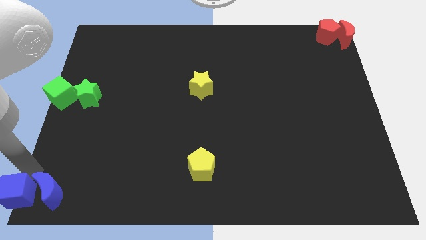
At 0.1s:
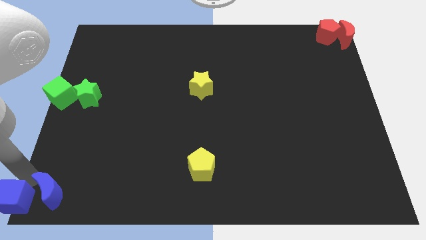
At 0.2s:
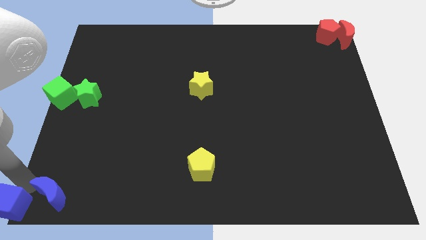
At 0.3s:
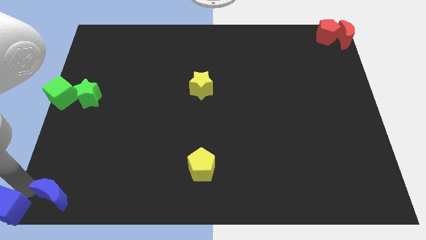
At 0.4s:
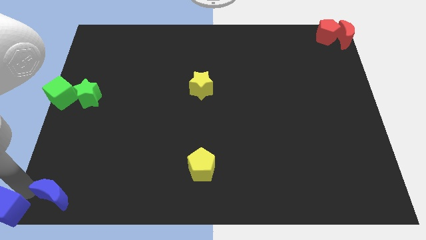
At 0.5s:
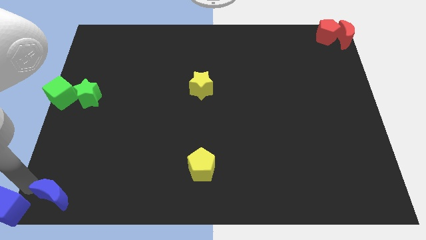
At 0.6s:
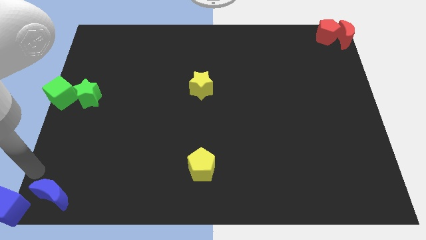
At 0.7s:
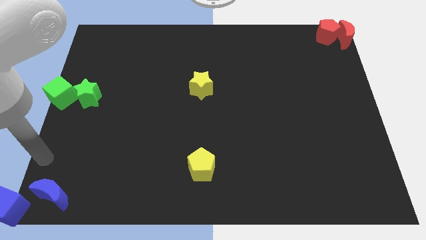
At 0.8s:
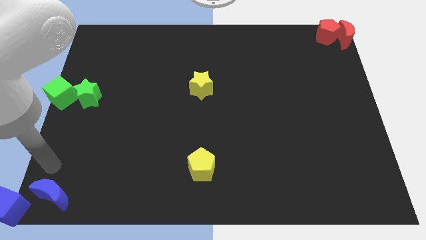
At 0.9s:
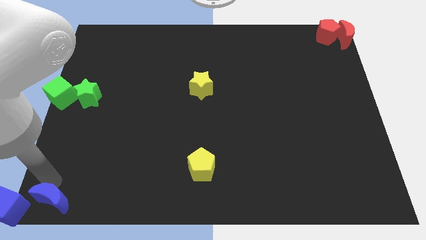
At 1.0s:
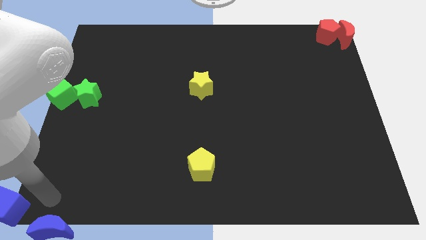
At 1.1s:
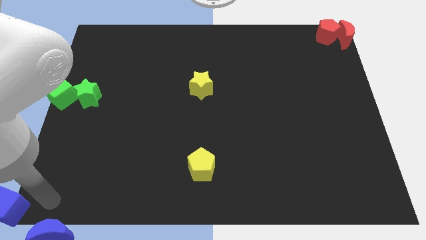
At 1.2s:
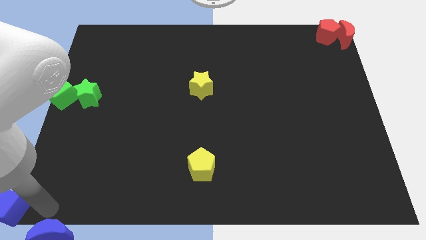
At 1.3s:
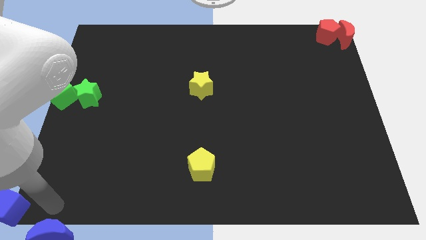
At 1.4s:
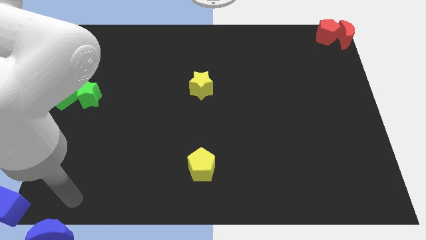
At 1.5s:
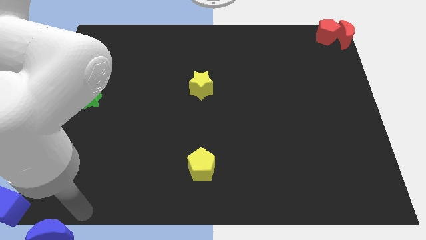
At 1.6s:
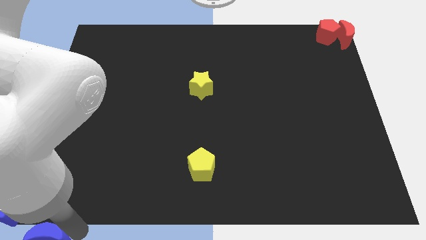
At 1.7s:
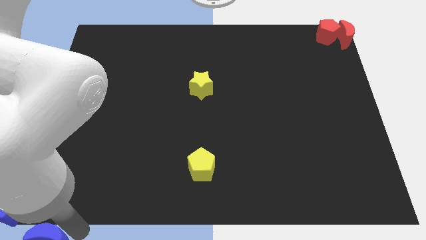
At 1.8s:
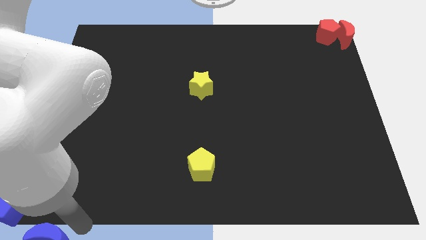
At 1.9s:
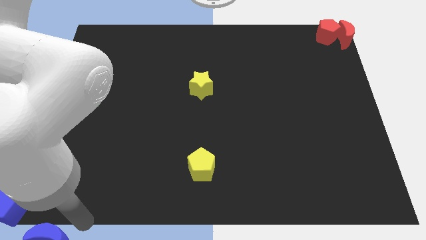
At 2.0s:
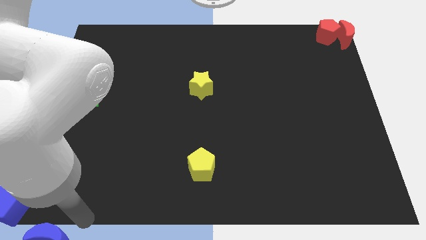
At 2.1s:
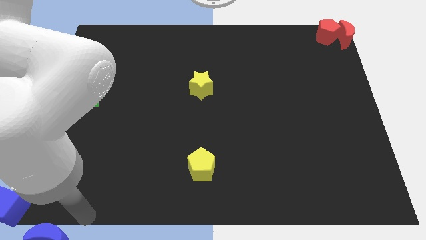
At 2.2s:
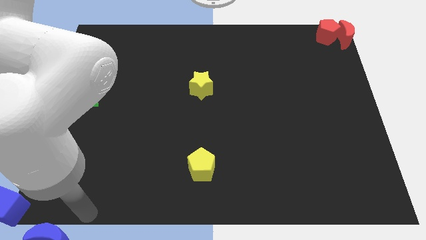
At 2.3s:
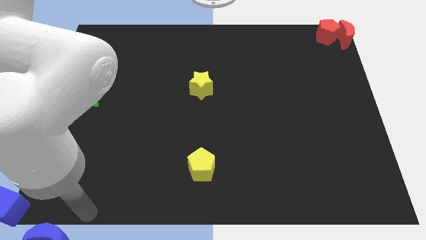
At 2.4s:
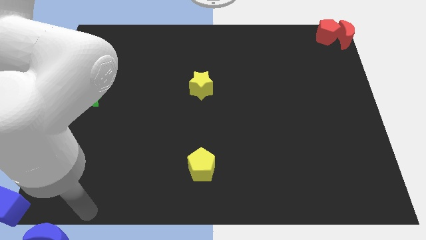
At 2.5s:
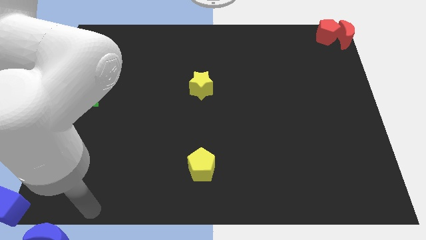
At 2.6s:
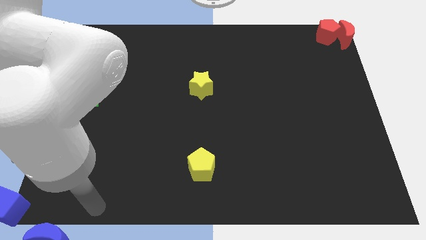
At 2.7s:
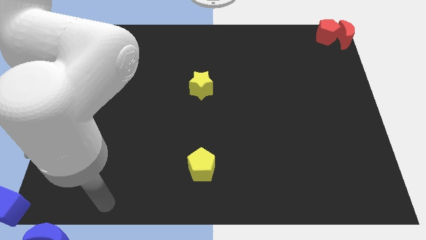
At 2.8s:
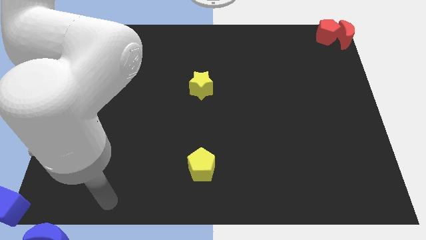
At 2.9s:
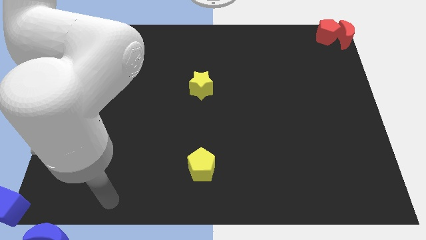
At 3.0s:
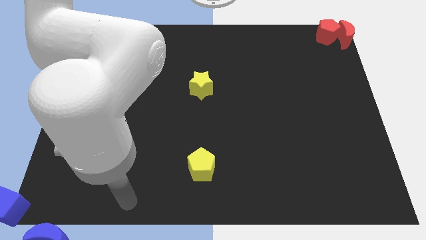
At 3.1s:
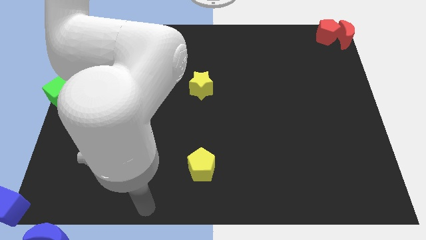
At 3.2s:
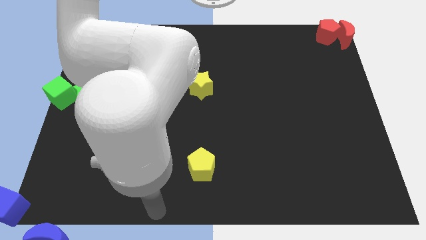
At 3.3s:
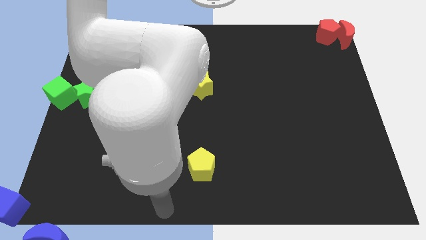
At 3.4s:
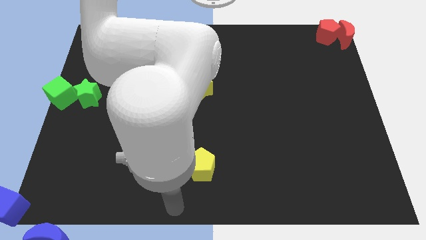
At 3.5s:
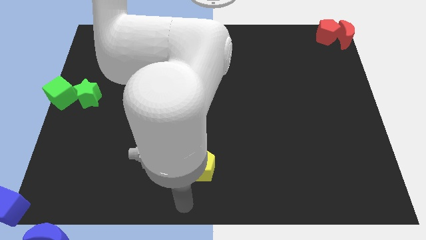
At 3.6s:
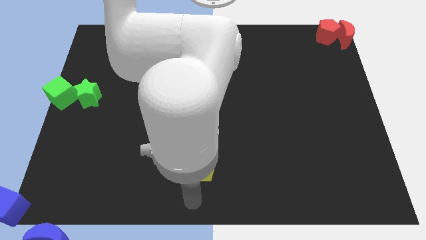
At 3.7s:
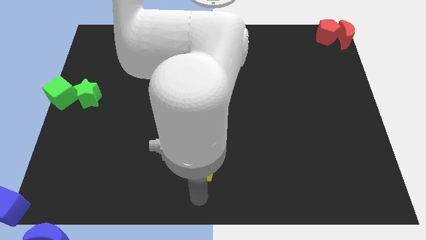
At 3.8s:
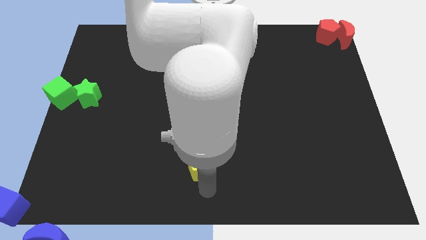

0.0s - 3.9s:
place the blue cube towards the bottom left corner of the board

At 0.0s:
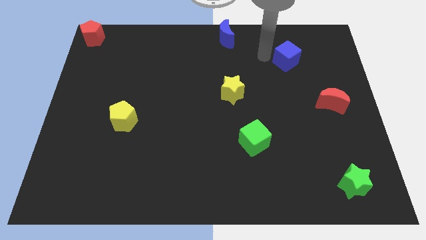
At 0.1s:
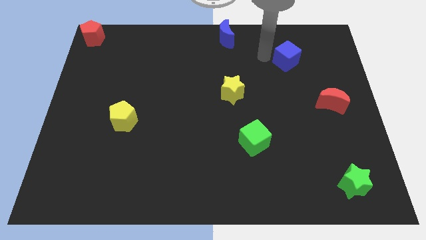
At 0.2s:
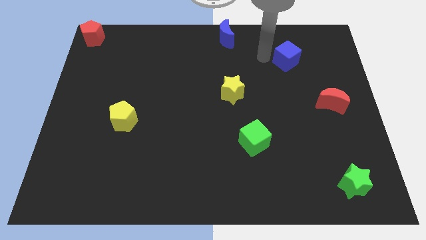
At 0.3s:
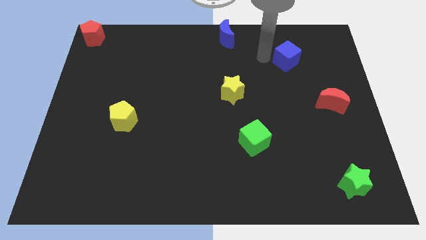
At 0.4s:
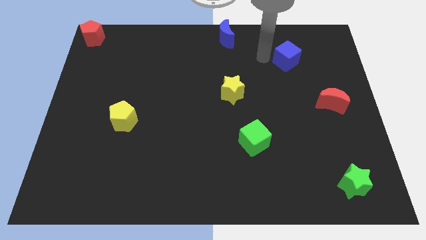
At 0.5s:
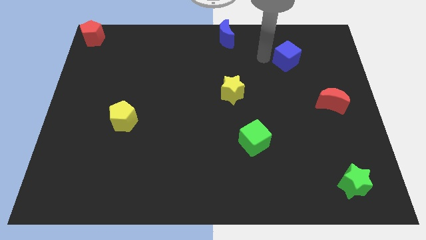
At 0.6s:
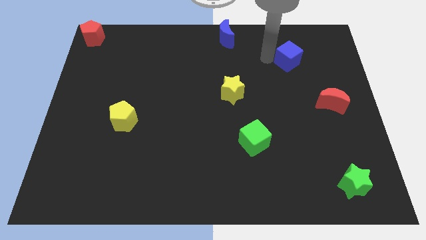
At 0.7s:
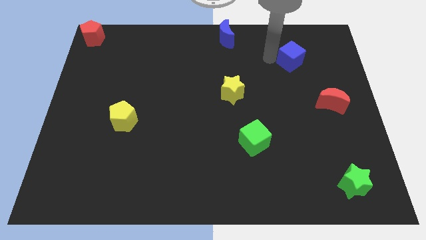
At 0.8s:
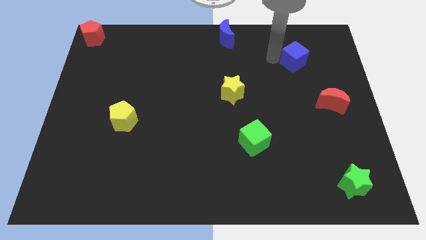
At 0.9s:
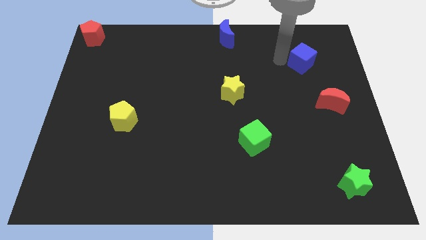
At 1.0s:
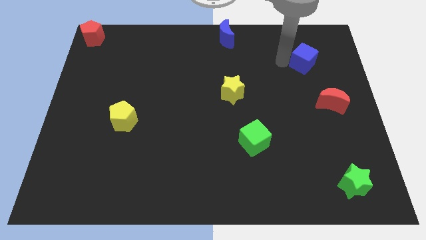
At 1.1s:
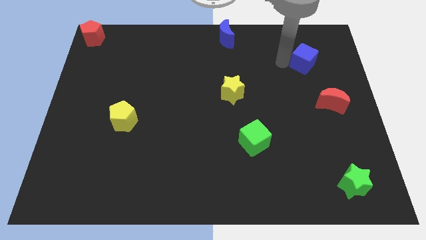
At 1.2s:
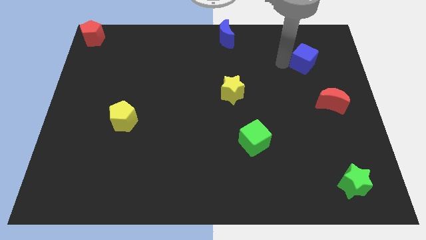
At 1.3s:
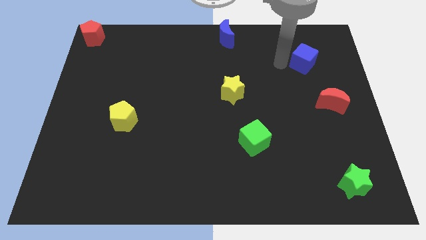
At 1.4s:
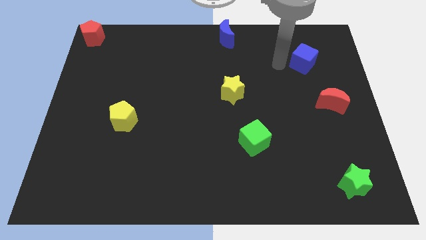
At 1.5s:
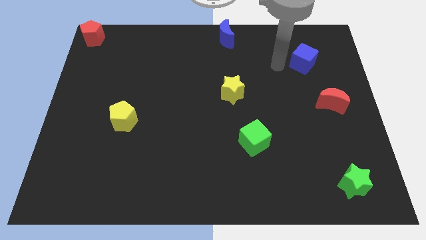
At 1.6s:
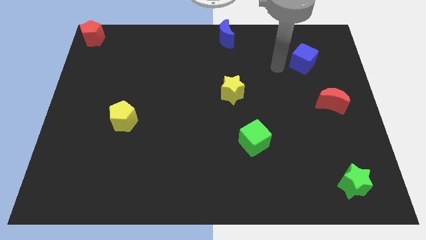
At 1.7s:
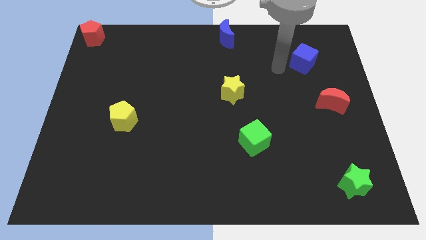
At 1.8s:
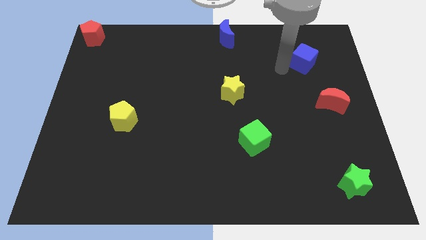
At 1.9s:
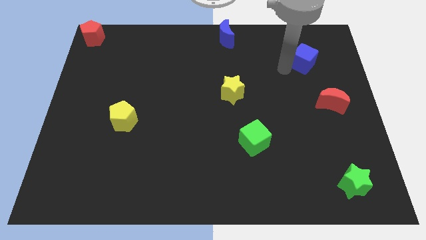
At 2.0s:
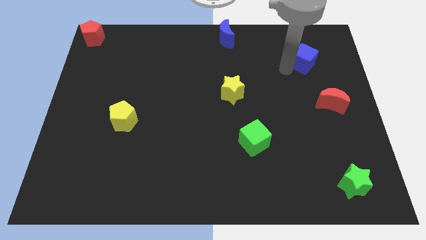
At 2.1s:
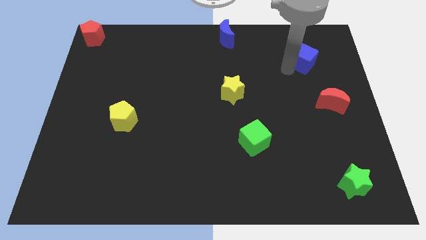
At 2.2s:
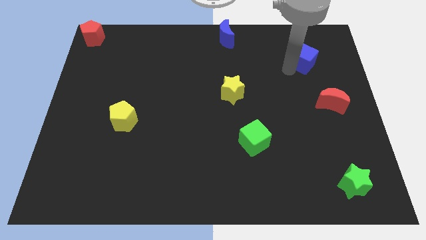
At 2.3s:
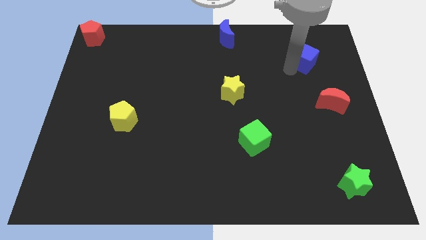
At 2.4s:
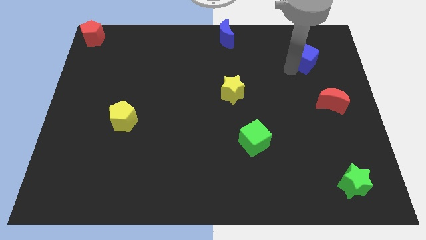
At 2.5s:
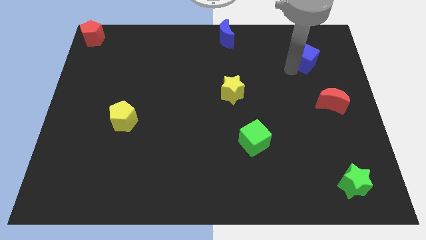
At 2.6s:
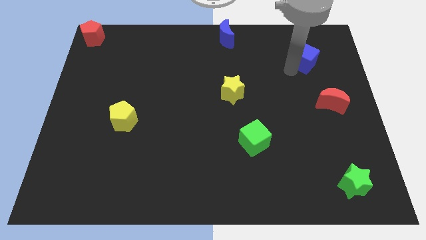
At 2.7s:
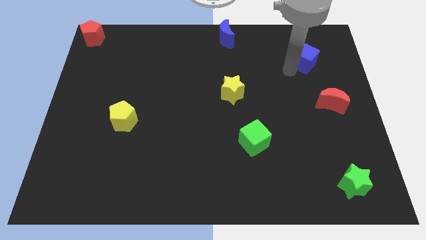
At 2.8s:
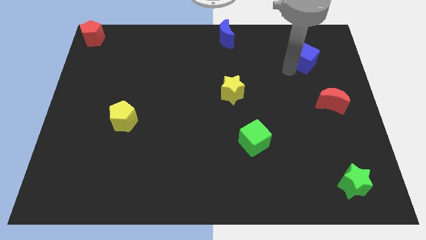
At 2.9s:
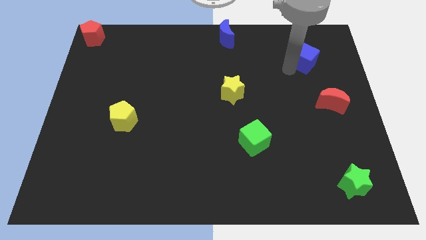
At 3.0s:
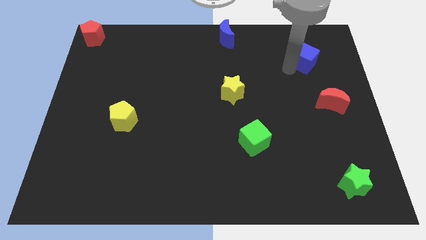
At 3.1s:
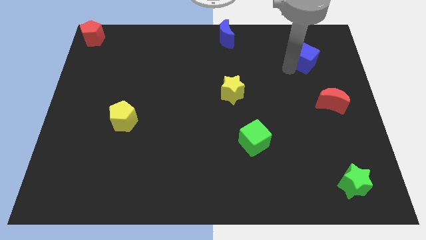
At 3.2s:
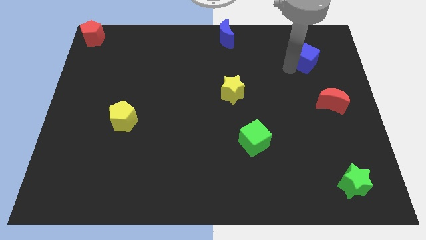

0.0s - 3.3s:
move the blue cube to right

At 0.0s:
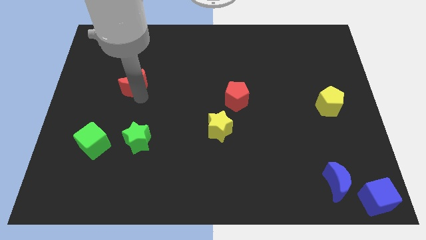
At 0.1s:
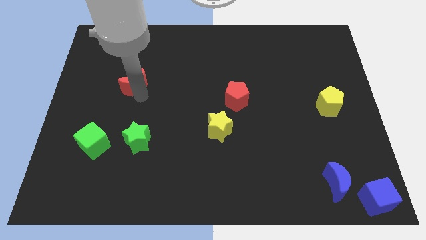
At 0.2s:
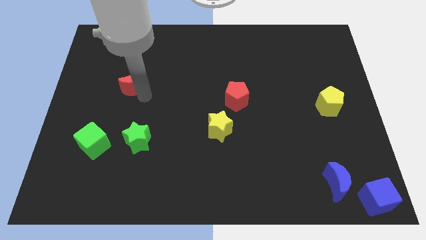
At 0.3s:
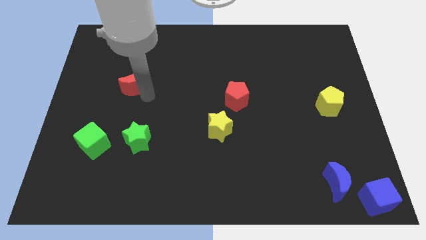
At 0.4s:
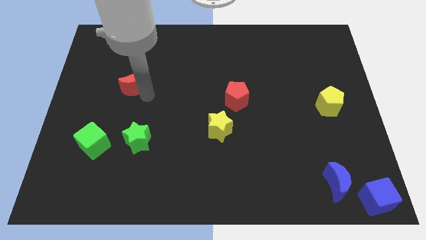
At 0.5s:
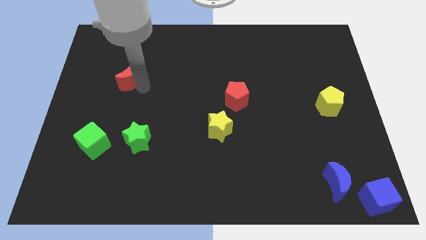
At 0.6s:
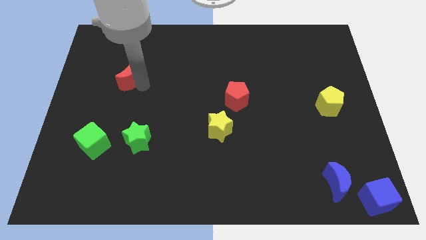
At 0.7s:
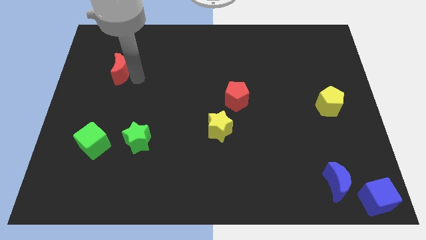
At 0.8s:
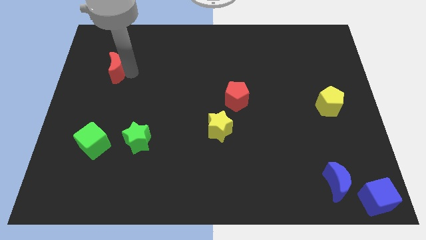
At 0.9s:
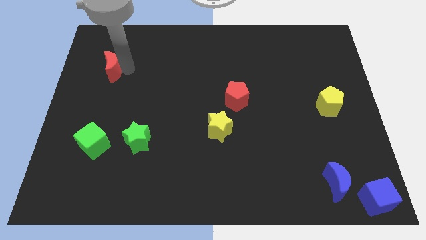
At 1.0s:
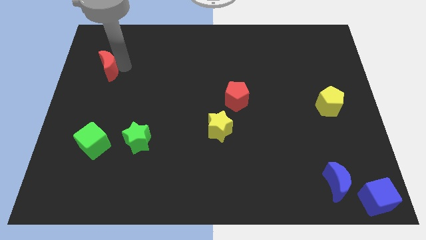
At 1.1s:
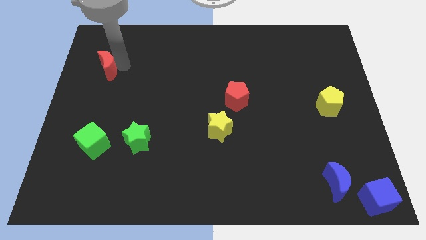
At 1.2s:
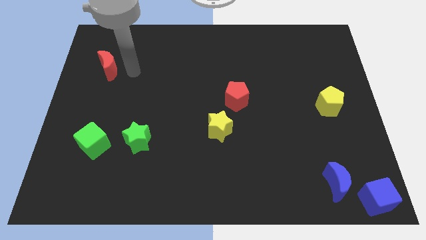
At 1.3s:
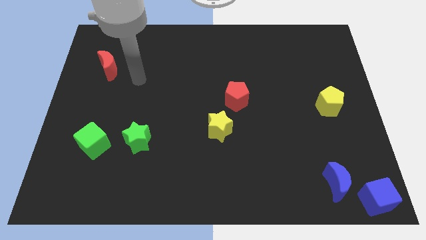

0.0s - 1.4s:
push the red moon to center left

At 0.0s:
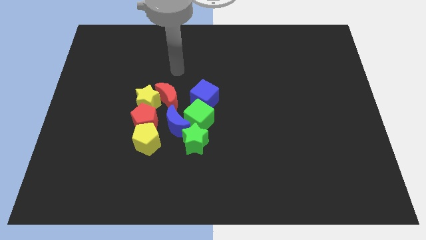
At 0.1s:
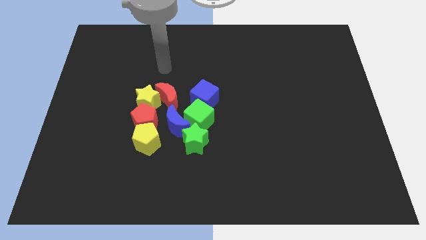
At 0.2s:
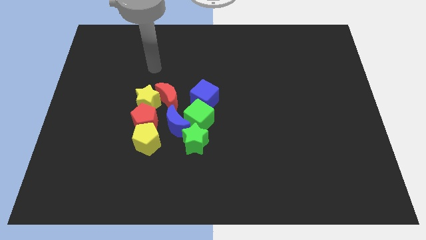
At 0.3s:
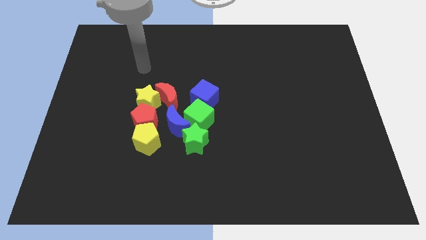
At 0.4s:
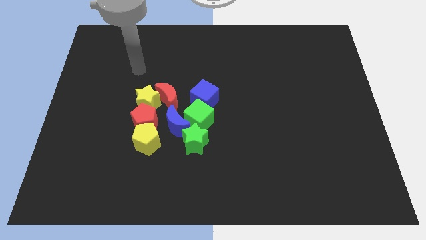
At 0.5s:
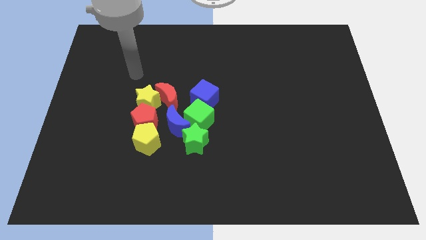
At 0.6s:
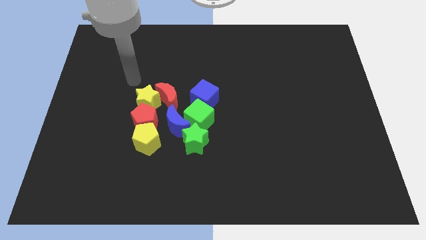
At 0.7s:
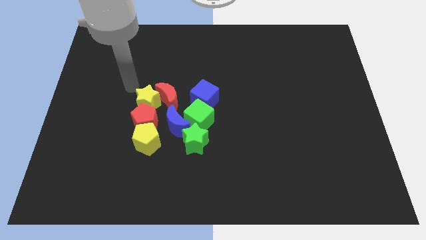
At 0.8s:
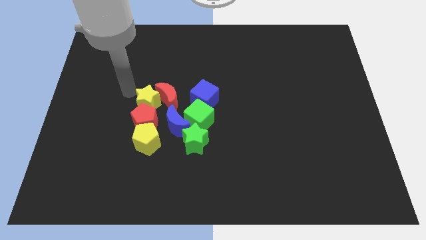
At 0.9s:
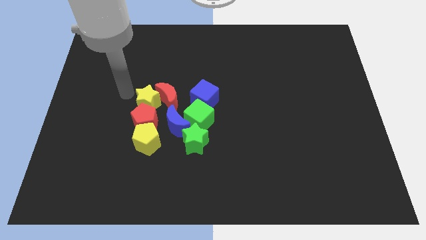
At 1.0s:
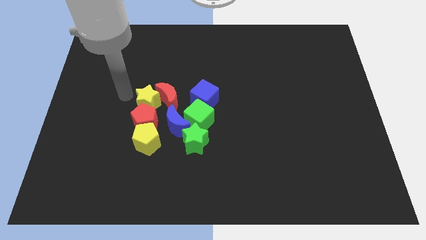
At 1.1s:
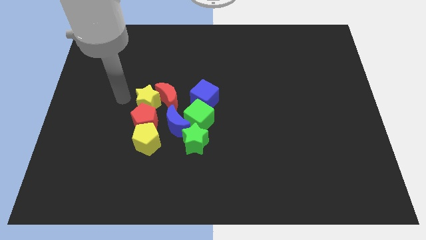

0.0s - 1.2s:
move the arm towards the left of the yellow star
